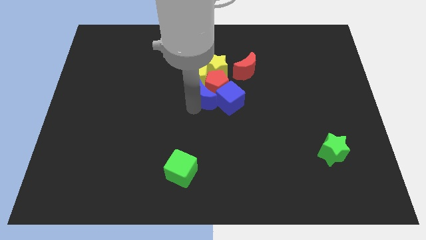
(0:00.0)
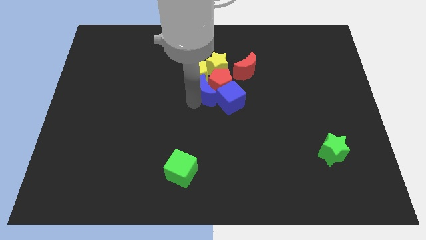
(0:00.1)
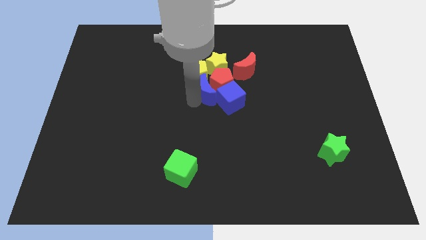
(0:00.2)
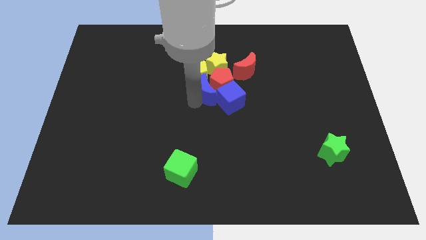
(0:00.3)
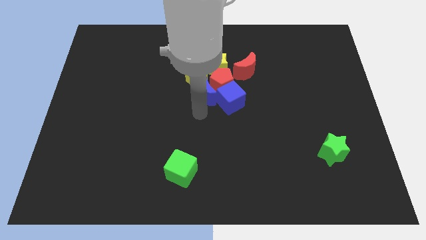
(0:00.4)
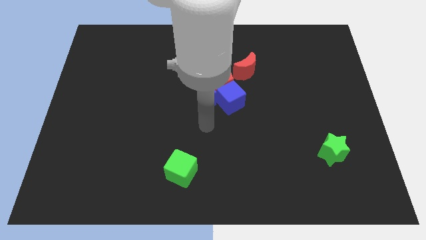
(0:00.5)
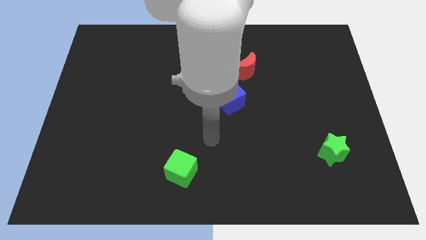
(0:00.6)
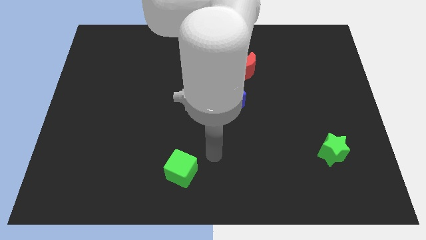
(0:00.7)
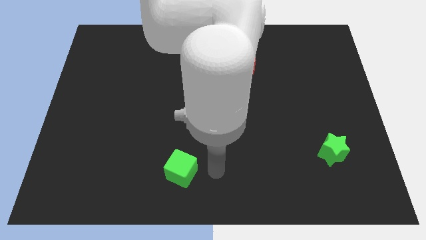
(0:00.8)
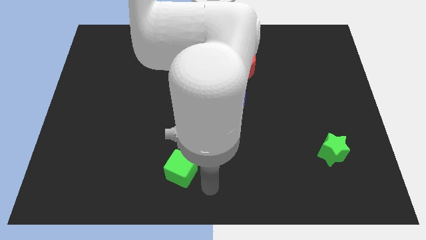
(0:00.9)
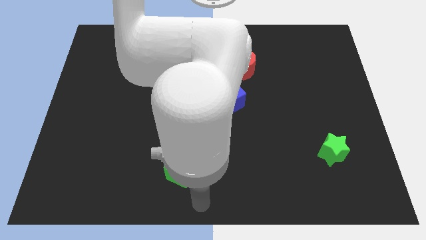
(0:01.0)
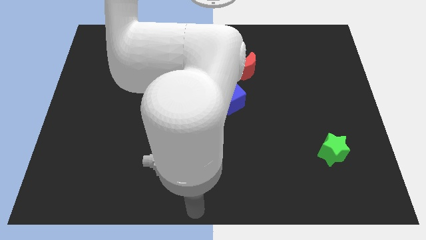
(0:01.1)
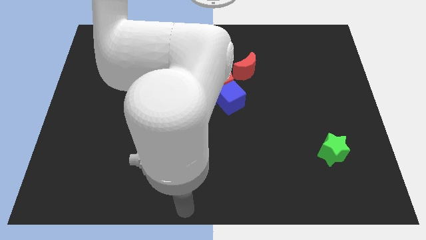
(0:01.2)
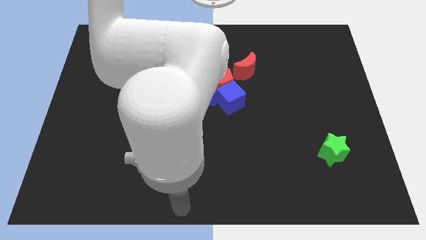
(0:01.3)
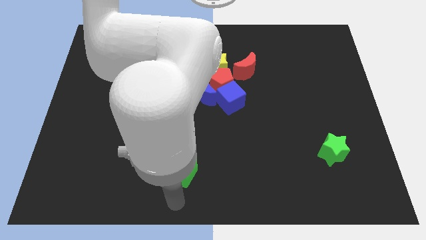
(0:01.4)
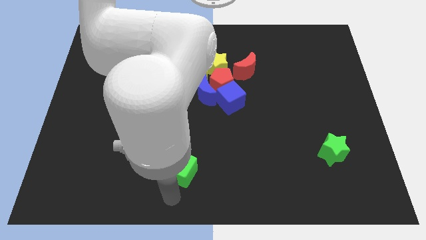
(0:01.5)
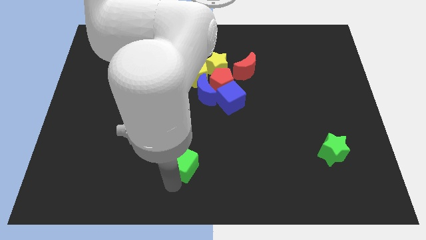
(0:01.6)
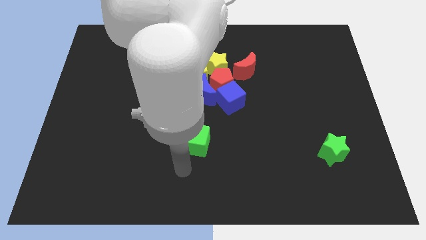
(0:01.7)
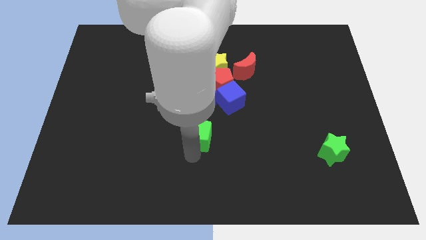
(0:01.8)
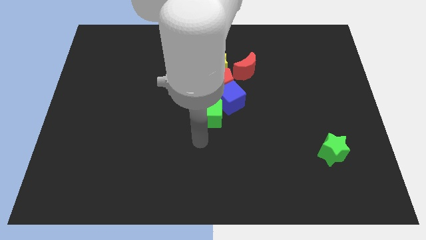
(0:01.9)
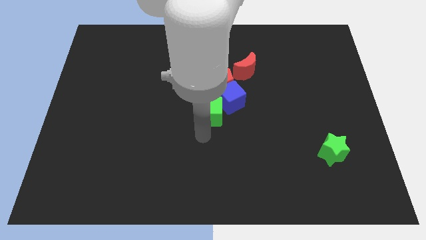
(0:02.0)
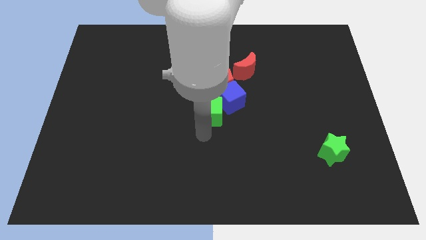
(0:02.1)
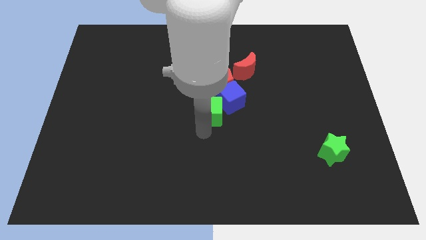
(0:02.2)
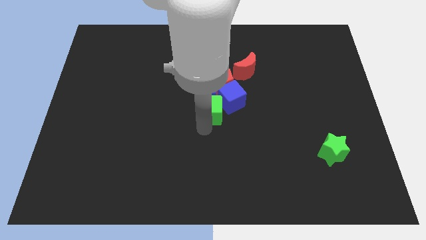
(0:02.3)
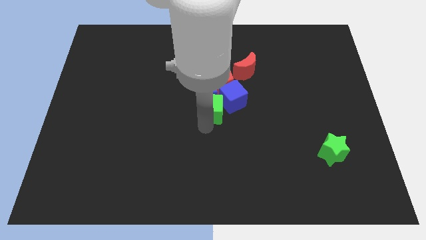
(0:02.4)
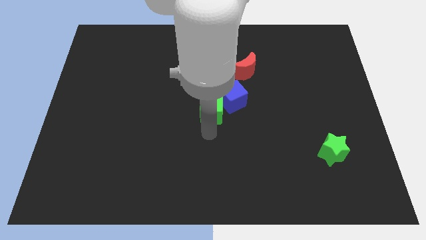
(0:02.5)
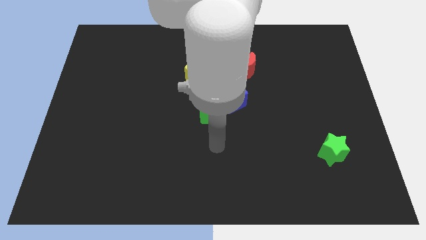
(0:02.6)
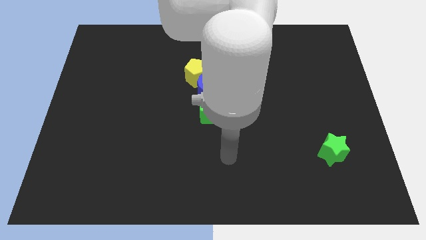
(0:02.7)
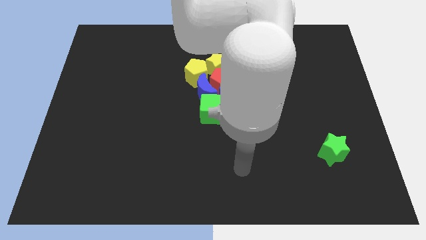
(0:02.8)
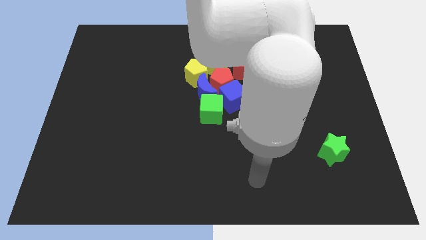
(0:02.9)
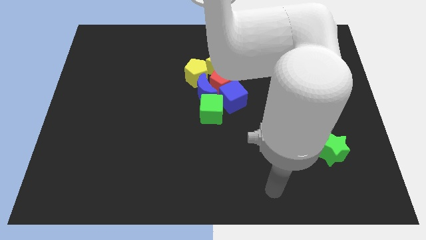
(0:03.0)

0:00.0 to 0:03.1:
push the green cube into the blue blocks

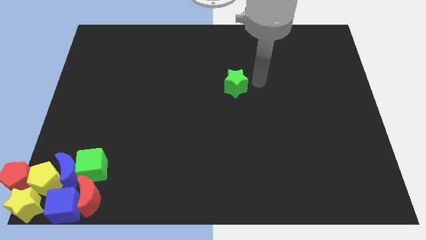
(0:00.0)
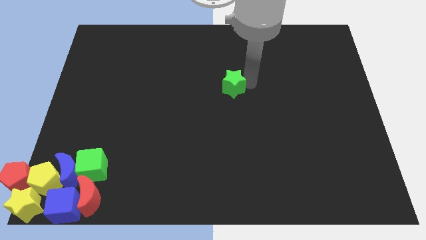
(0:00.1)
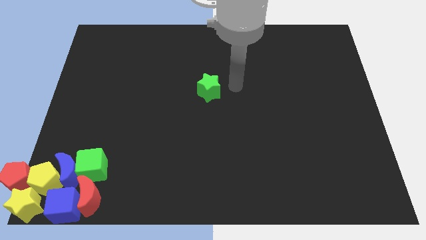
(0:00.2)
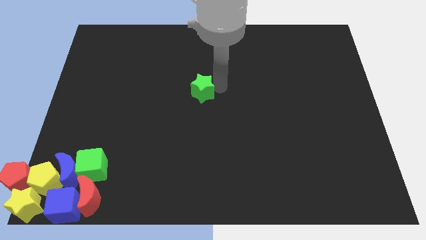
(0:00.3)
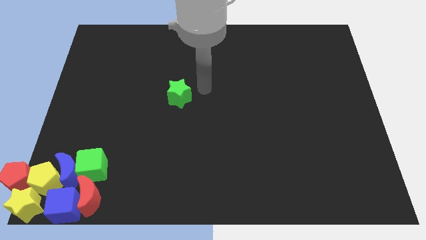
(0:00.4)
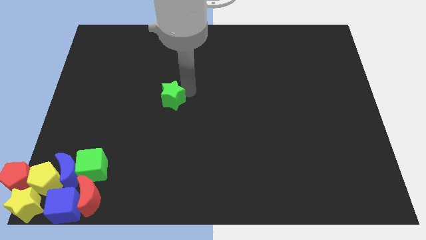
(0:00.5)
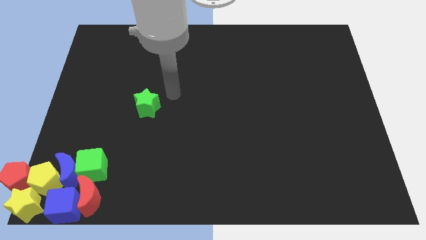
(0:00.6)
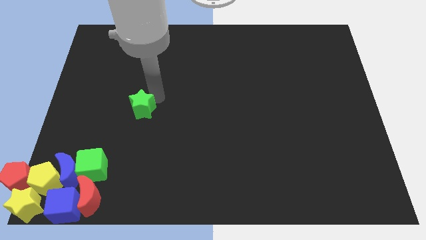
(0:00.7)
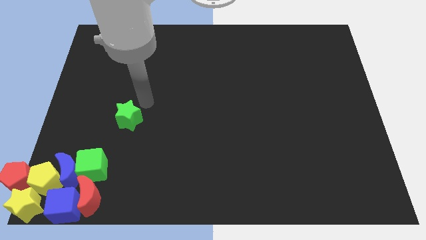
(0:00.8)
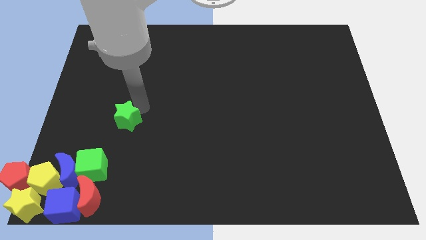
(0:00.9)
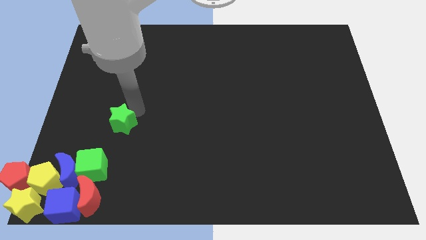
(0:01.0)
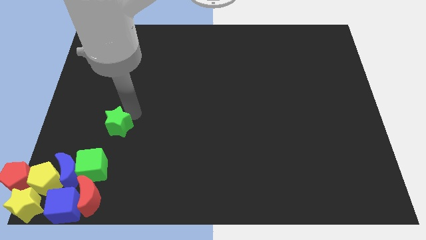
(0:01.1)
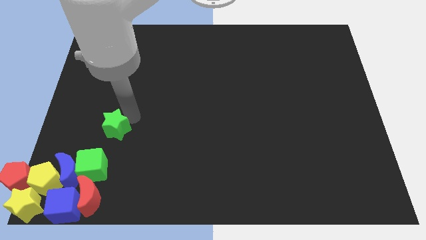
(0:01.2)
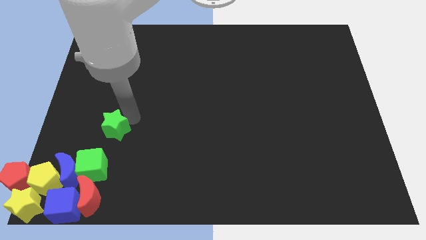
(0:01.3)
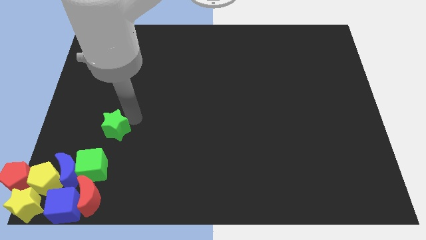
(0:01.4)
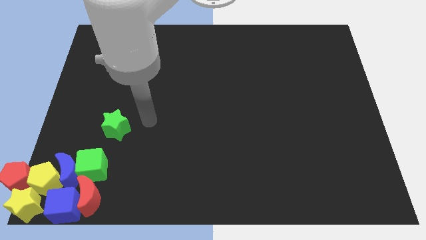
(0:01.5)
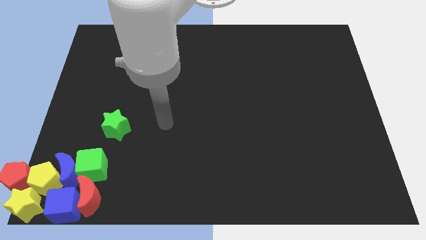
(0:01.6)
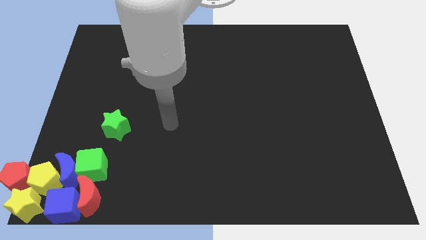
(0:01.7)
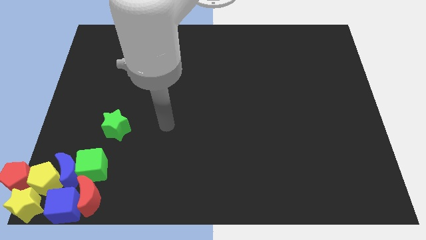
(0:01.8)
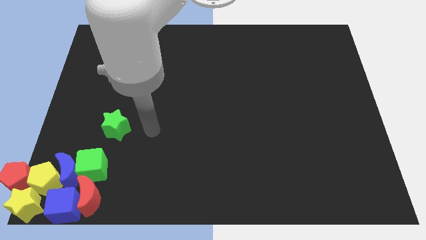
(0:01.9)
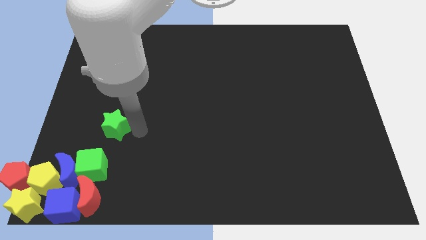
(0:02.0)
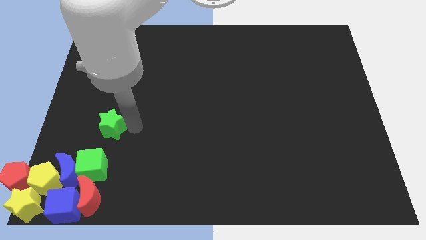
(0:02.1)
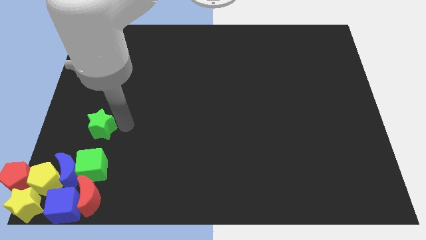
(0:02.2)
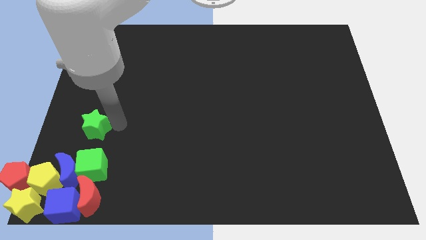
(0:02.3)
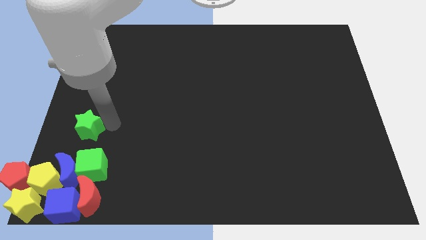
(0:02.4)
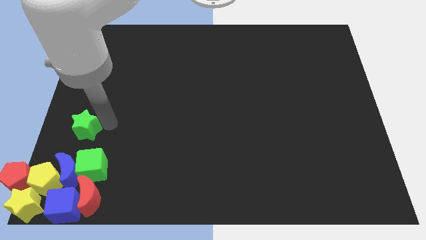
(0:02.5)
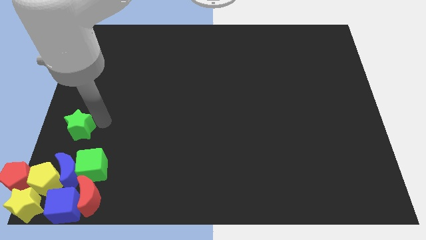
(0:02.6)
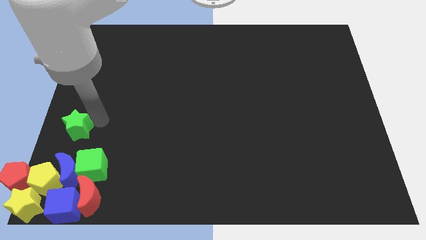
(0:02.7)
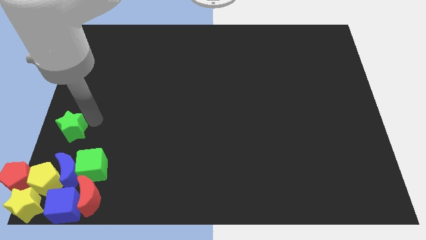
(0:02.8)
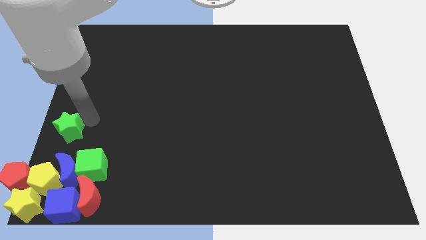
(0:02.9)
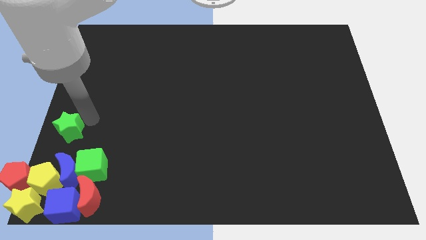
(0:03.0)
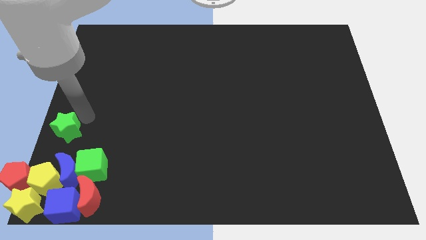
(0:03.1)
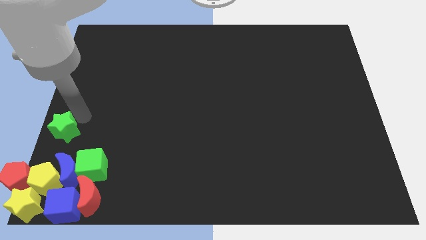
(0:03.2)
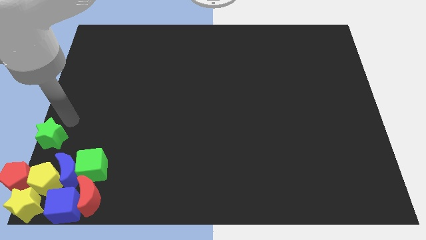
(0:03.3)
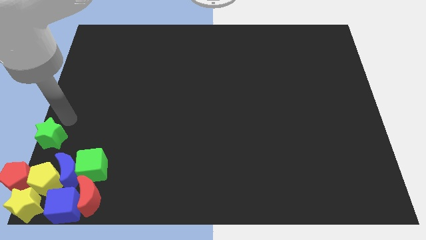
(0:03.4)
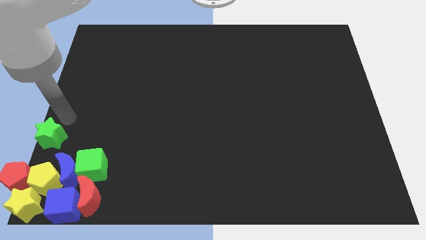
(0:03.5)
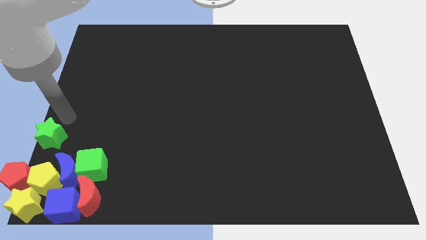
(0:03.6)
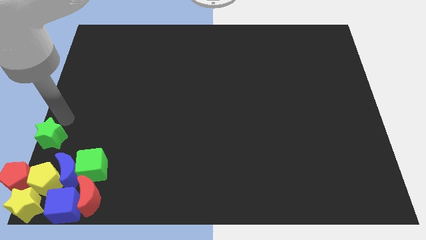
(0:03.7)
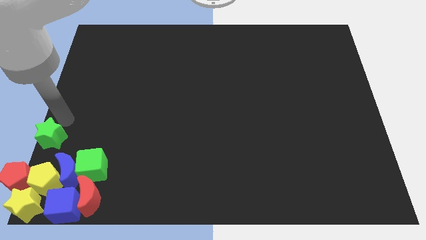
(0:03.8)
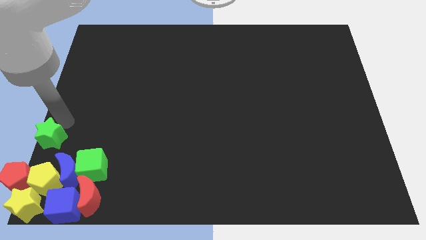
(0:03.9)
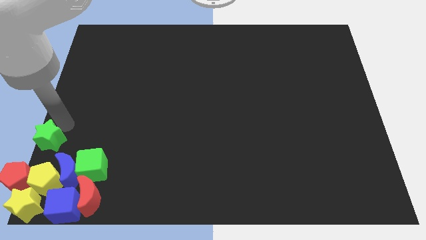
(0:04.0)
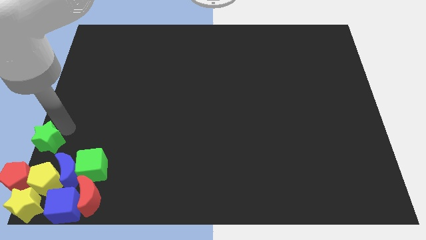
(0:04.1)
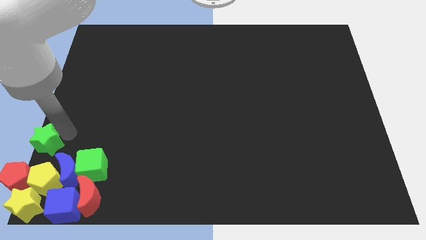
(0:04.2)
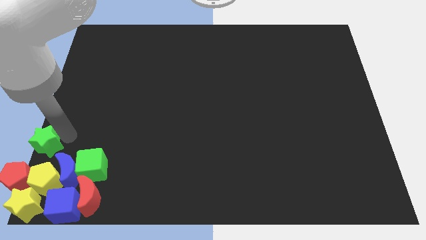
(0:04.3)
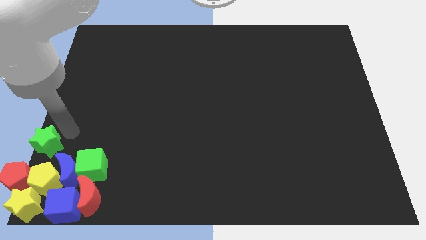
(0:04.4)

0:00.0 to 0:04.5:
place the green star above the group of blocks

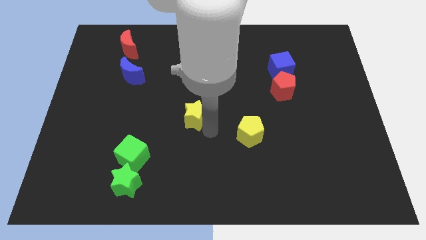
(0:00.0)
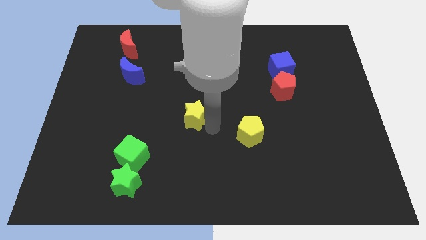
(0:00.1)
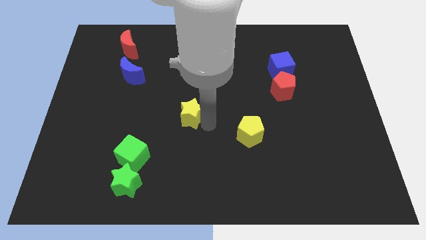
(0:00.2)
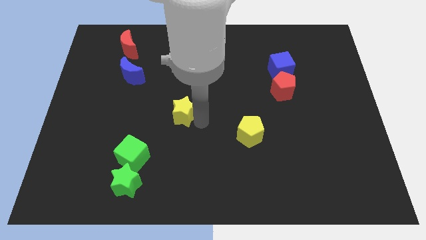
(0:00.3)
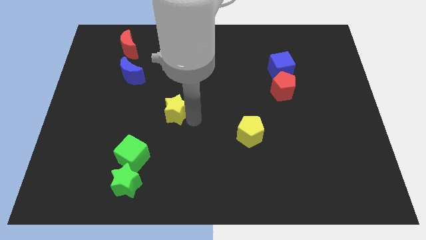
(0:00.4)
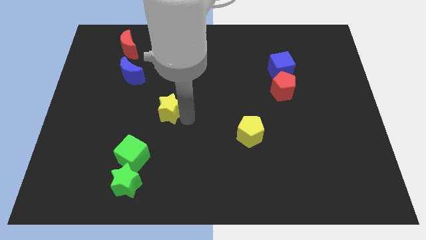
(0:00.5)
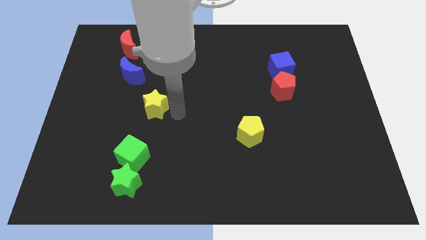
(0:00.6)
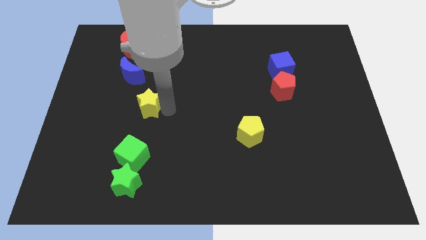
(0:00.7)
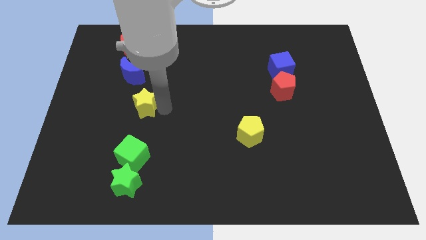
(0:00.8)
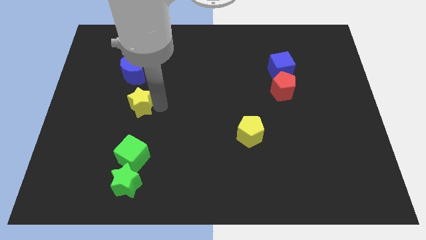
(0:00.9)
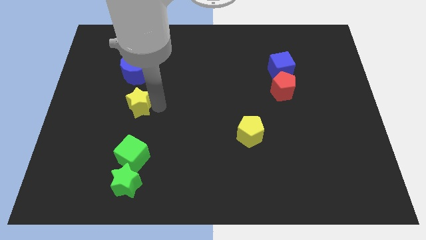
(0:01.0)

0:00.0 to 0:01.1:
put the yellow star below the blue crescent

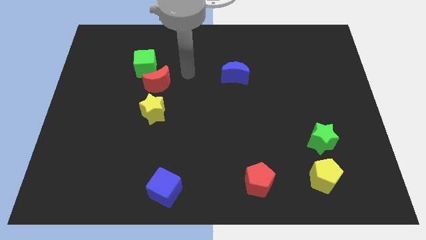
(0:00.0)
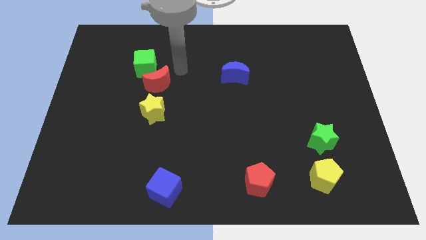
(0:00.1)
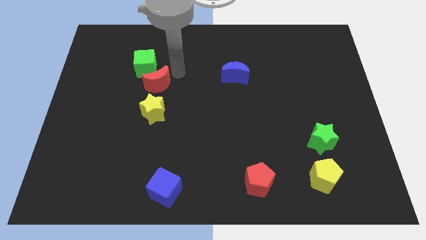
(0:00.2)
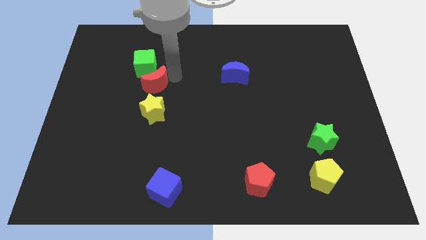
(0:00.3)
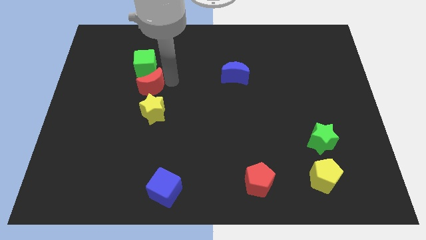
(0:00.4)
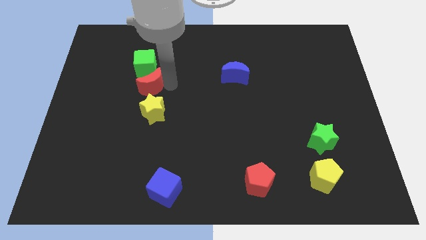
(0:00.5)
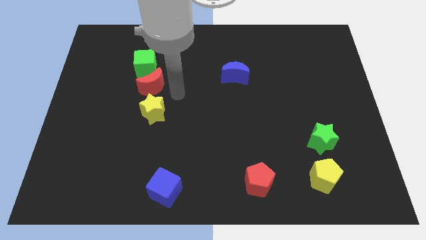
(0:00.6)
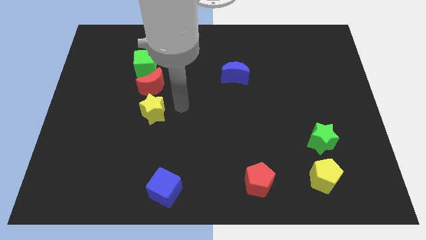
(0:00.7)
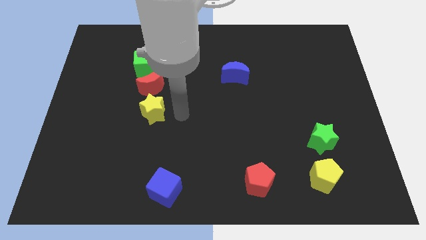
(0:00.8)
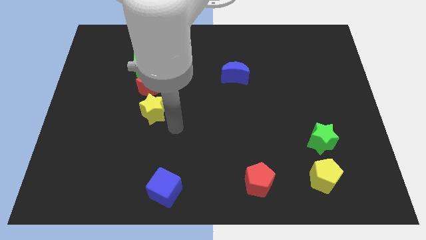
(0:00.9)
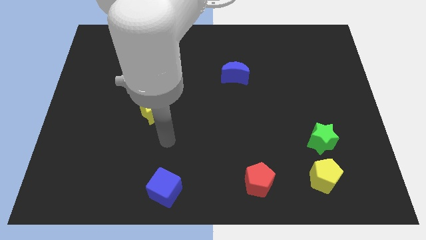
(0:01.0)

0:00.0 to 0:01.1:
move the red moon slightly towards the right
